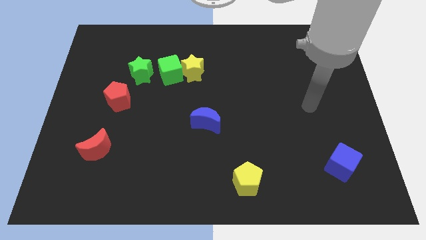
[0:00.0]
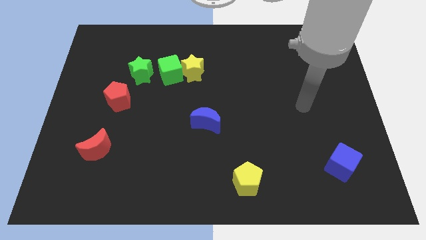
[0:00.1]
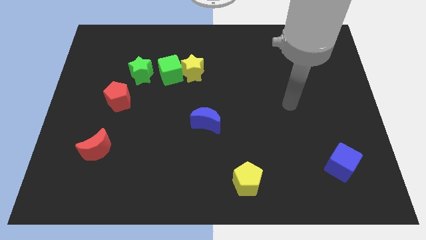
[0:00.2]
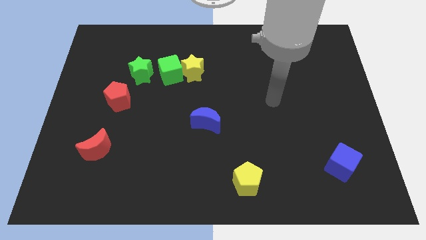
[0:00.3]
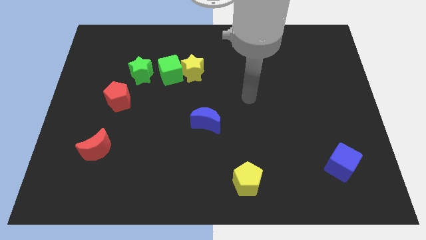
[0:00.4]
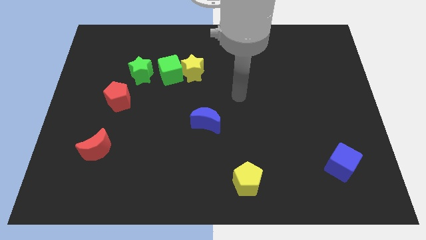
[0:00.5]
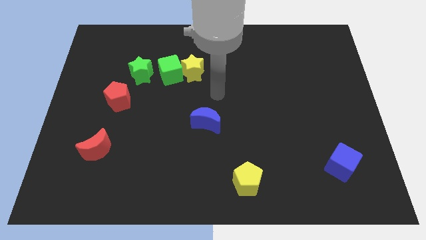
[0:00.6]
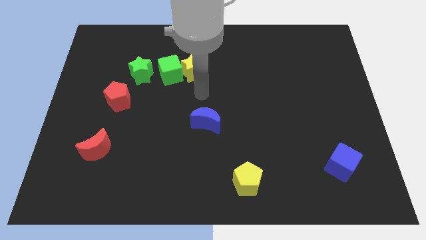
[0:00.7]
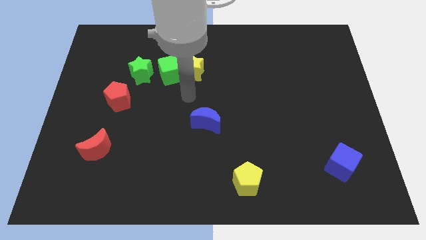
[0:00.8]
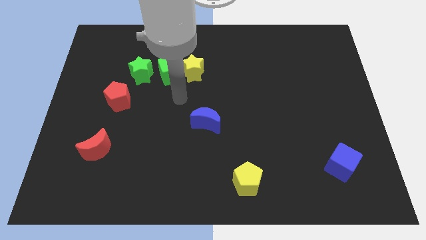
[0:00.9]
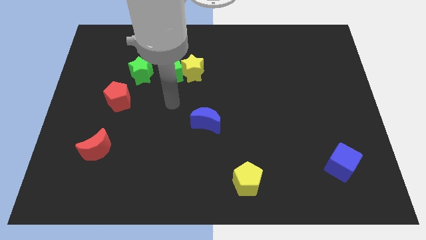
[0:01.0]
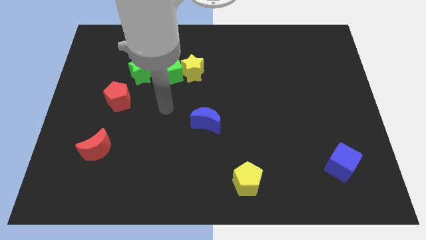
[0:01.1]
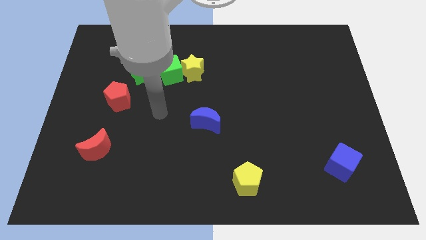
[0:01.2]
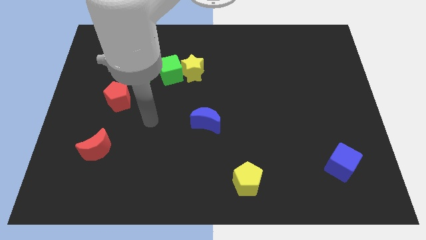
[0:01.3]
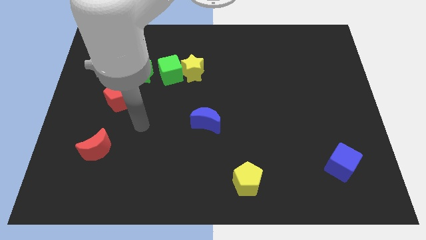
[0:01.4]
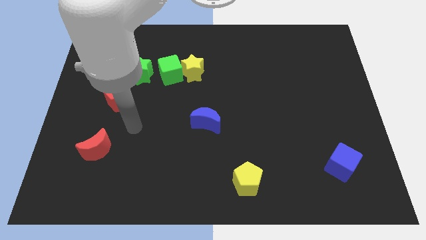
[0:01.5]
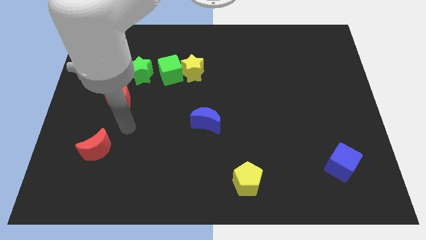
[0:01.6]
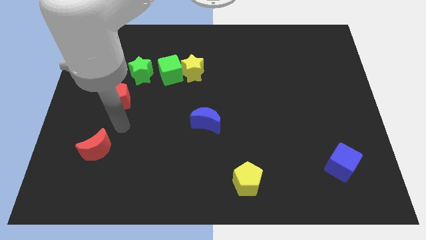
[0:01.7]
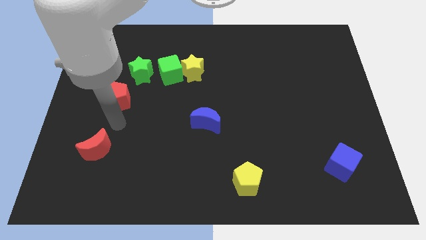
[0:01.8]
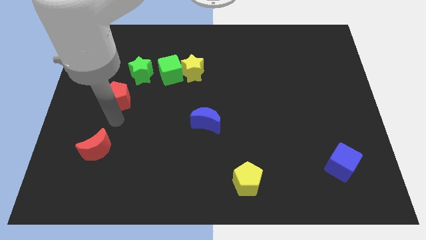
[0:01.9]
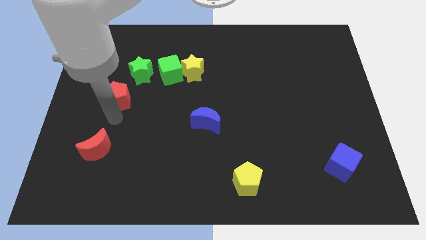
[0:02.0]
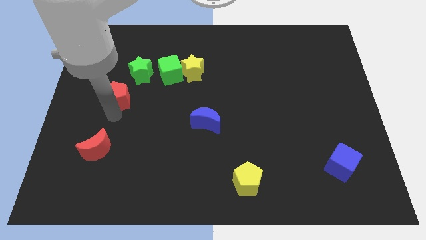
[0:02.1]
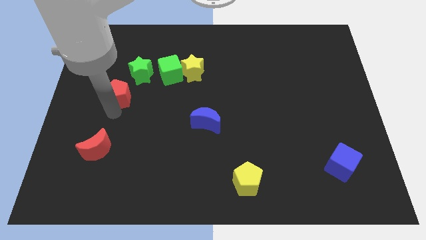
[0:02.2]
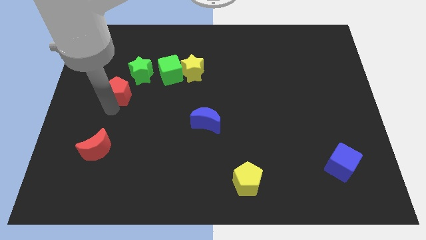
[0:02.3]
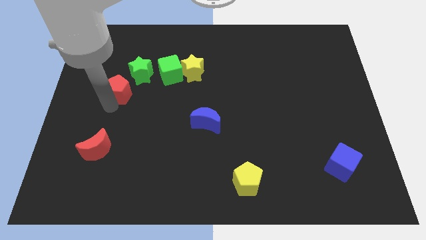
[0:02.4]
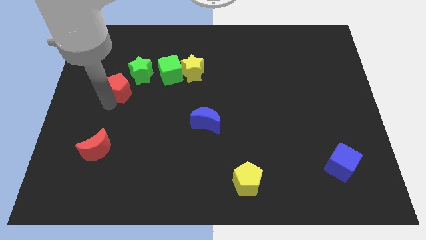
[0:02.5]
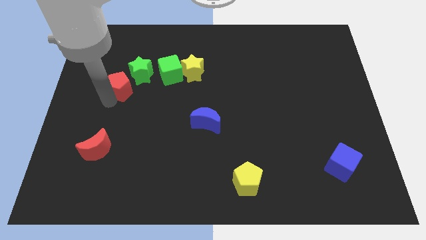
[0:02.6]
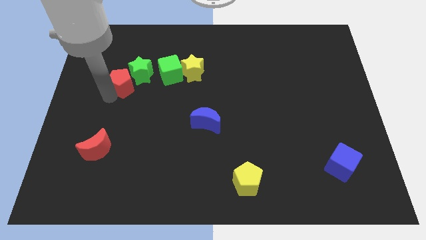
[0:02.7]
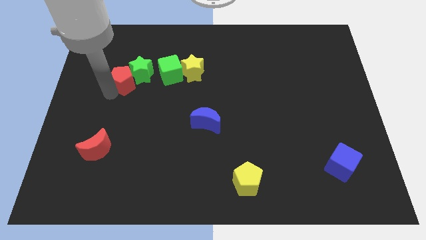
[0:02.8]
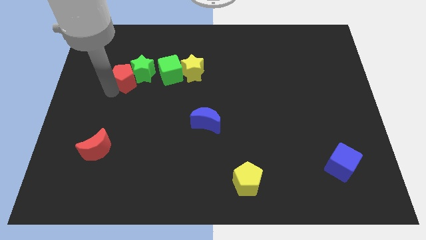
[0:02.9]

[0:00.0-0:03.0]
put the red pentagon close to the green star

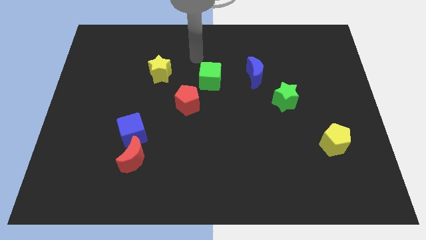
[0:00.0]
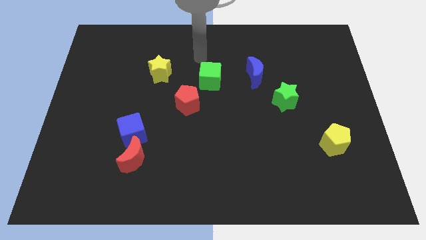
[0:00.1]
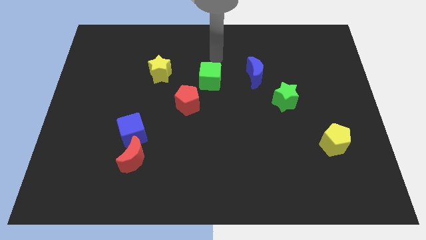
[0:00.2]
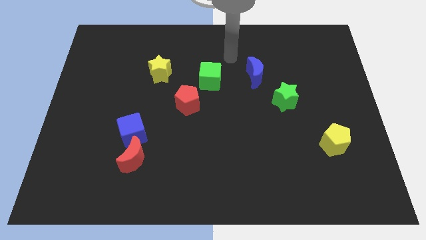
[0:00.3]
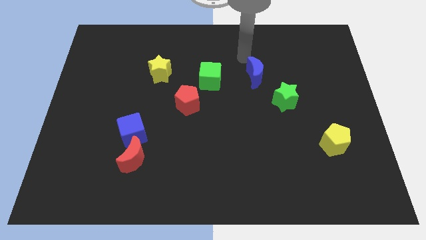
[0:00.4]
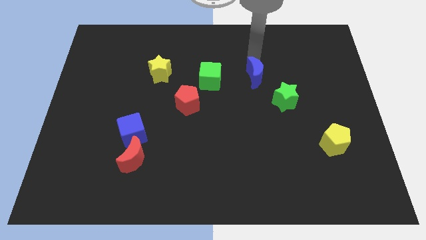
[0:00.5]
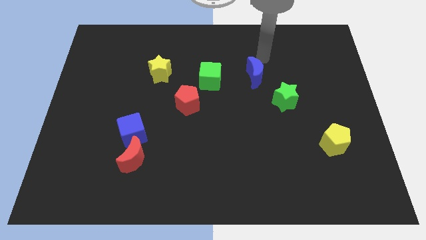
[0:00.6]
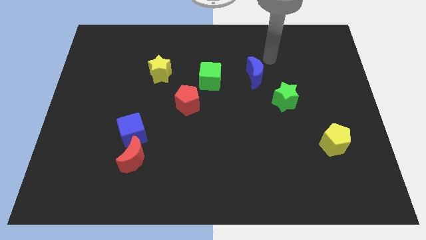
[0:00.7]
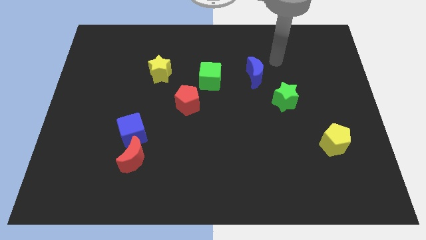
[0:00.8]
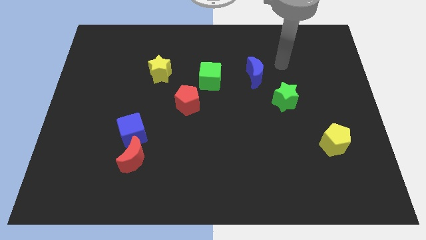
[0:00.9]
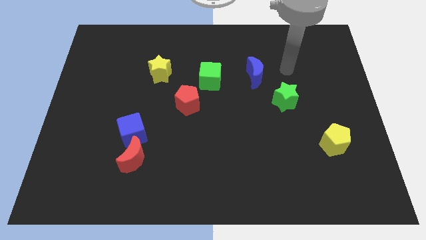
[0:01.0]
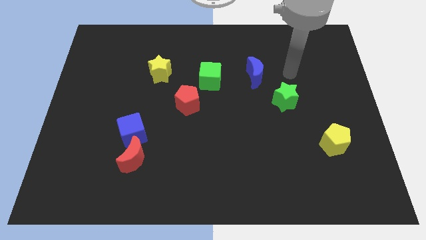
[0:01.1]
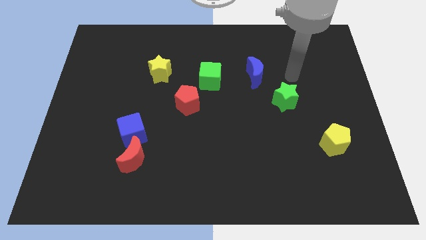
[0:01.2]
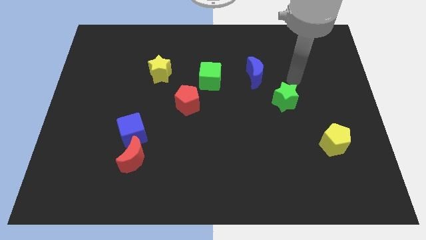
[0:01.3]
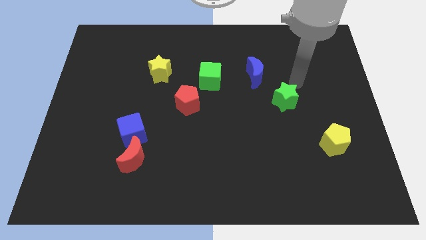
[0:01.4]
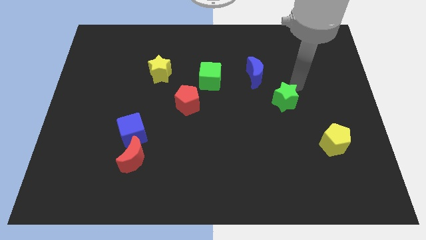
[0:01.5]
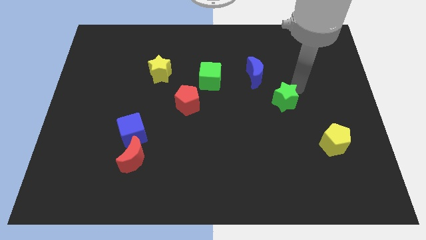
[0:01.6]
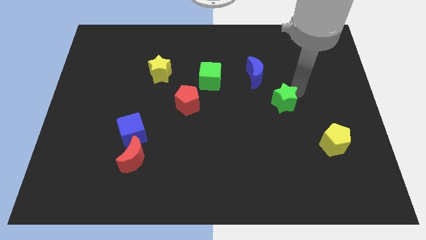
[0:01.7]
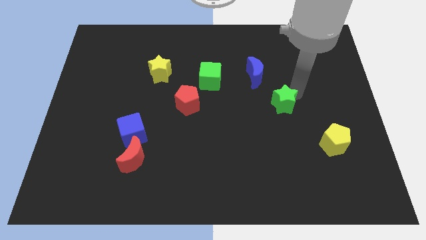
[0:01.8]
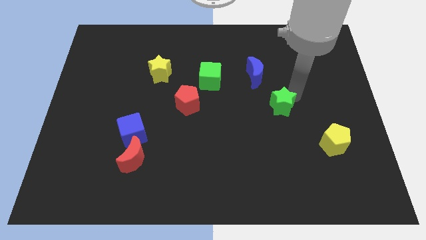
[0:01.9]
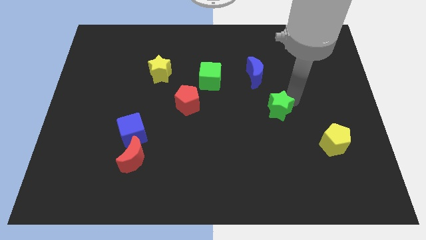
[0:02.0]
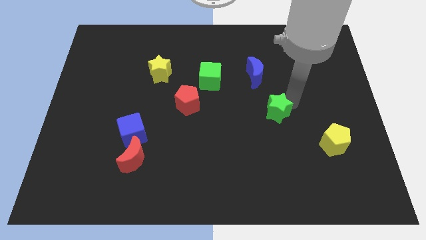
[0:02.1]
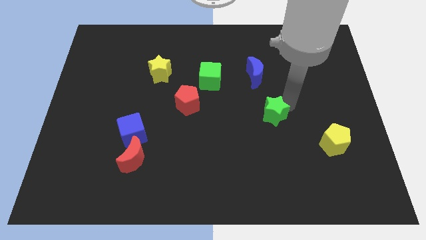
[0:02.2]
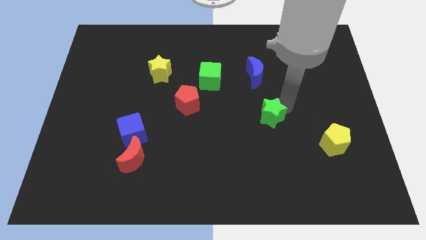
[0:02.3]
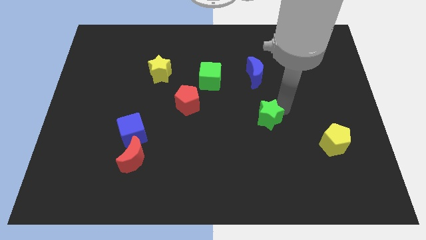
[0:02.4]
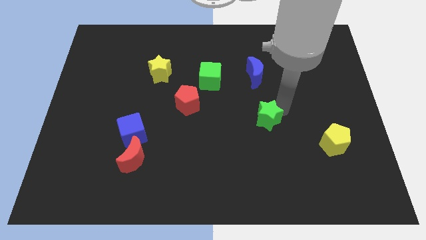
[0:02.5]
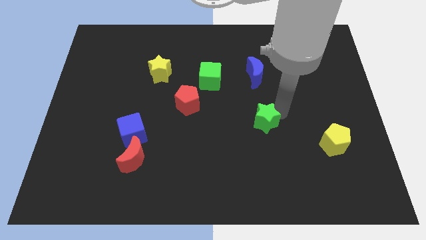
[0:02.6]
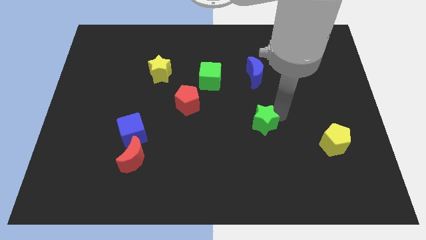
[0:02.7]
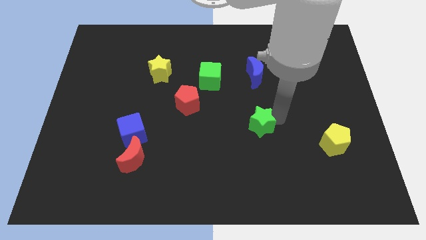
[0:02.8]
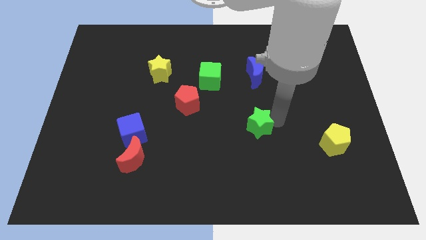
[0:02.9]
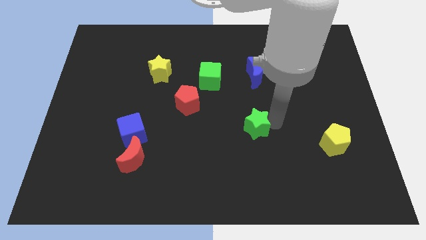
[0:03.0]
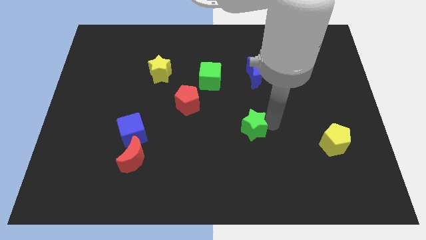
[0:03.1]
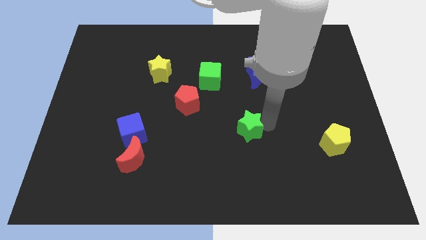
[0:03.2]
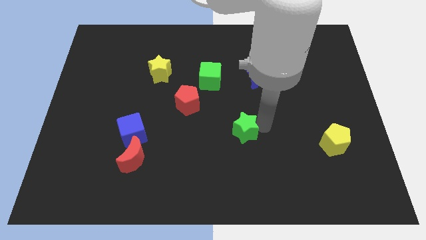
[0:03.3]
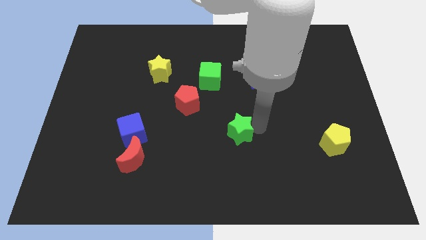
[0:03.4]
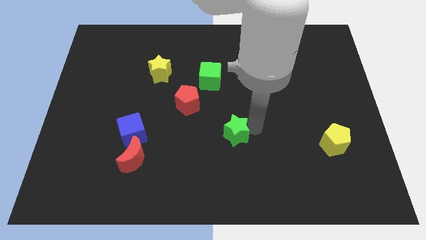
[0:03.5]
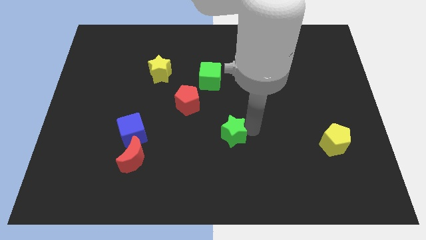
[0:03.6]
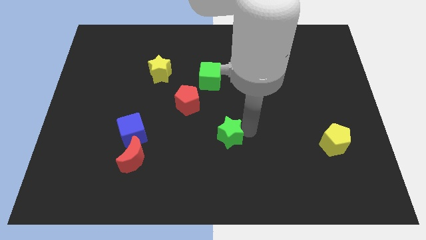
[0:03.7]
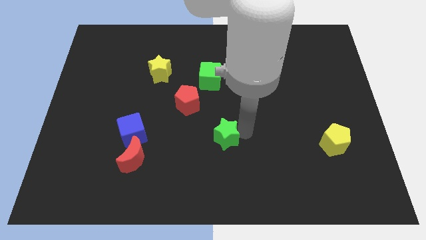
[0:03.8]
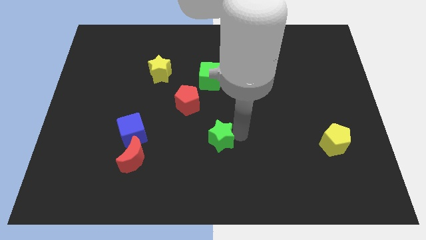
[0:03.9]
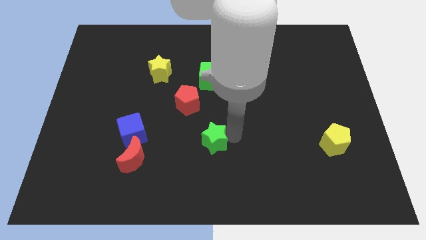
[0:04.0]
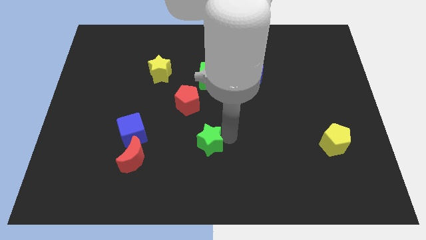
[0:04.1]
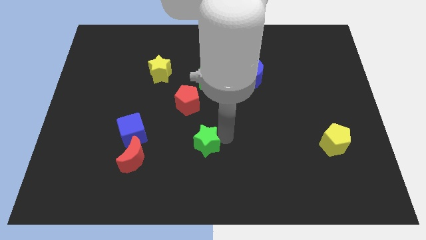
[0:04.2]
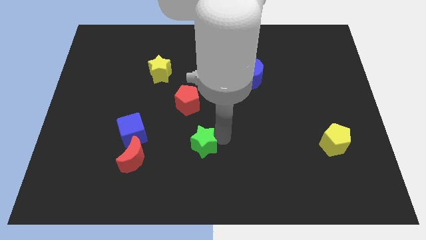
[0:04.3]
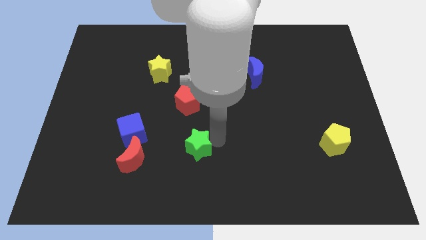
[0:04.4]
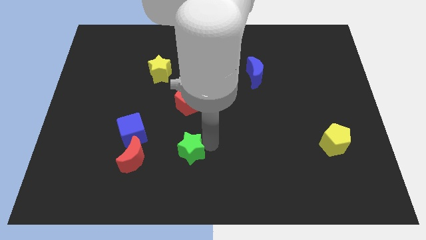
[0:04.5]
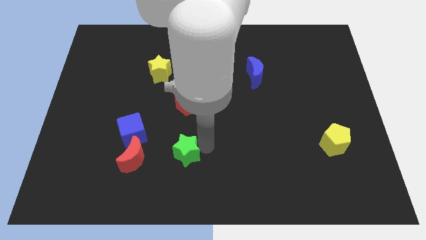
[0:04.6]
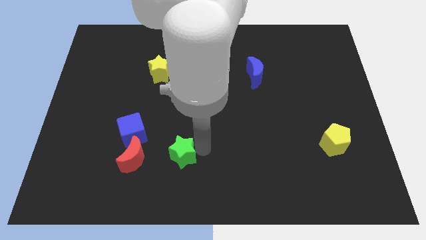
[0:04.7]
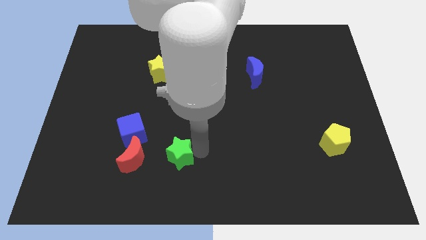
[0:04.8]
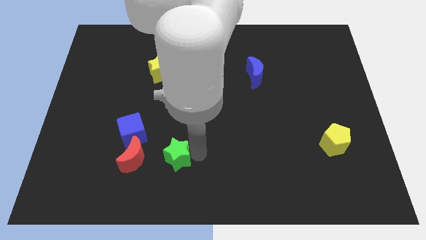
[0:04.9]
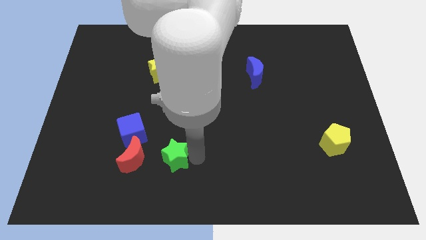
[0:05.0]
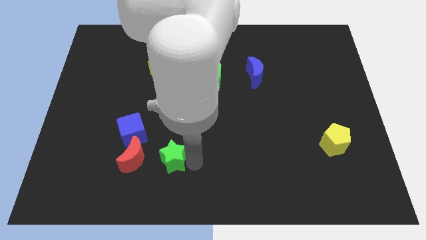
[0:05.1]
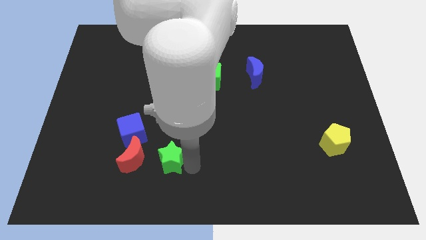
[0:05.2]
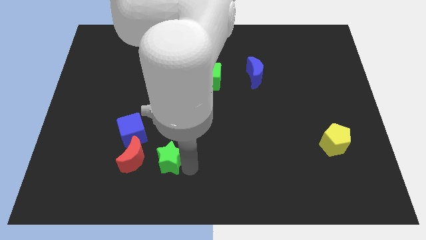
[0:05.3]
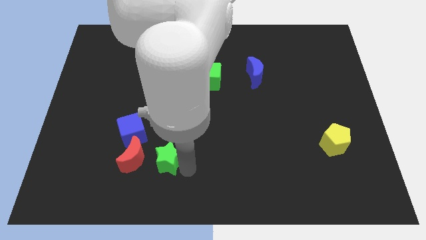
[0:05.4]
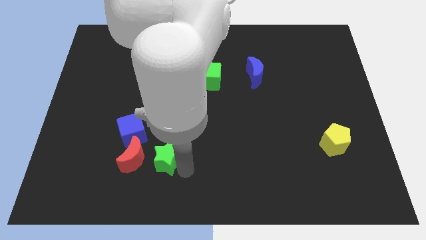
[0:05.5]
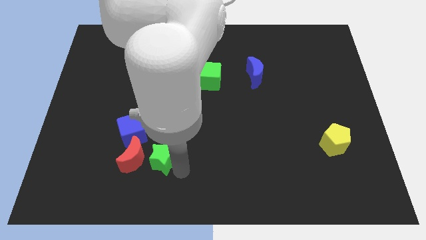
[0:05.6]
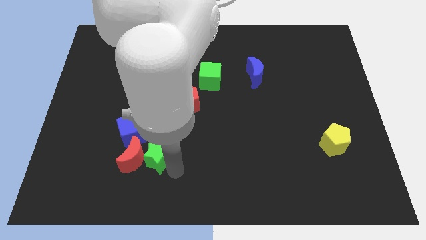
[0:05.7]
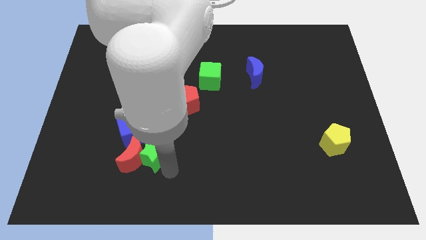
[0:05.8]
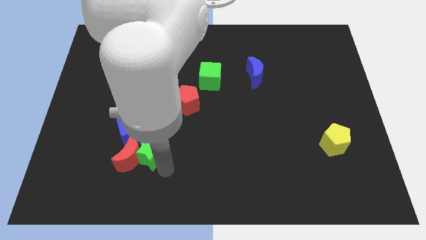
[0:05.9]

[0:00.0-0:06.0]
slide the green star next to the red moon
